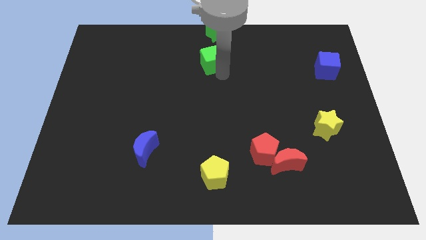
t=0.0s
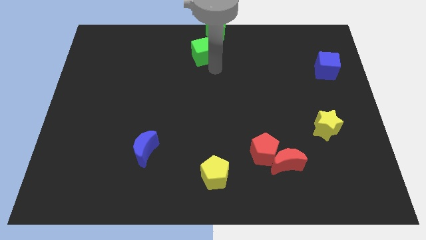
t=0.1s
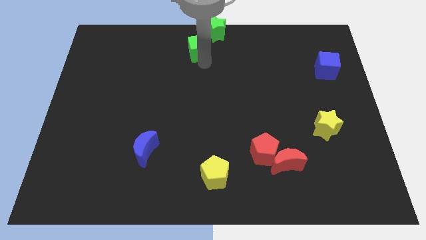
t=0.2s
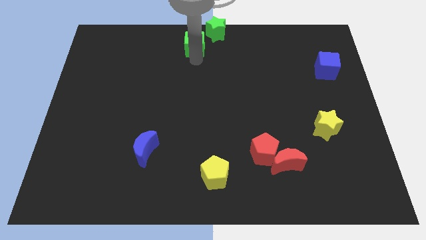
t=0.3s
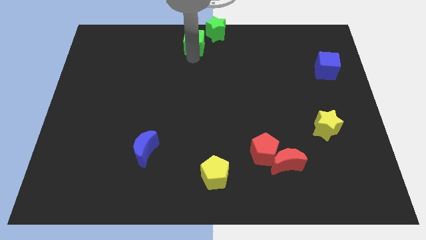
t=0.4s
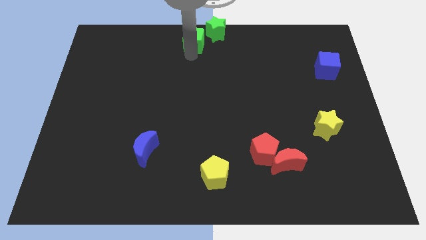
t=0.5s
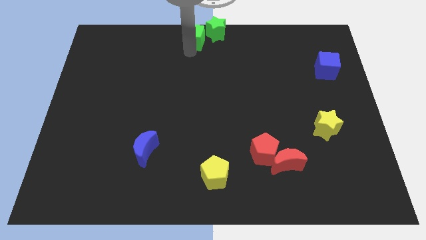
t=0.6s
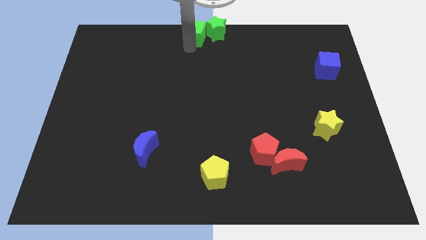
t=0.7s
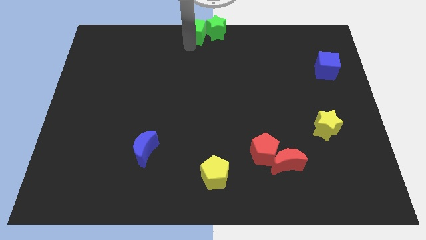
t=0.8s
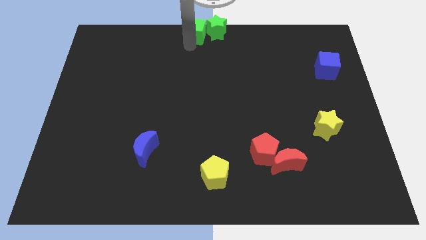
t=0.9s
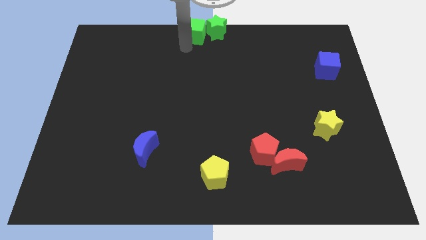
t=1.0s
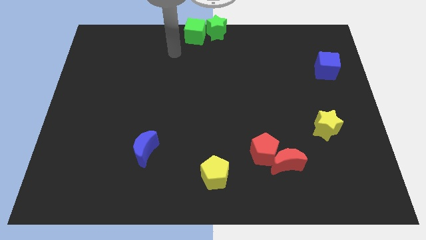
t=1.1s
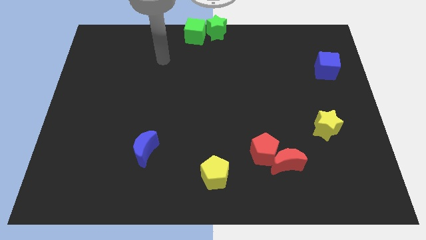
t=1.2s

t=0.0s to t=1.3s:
push the green cube to the left of the green star

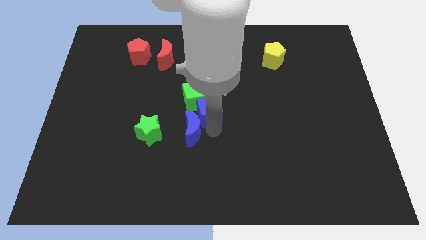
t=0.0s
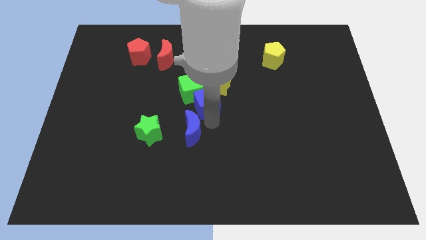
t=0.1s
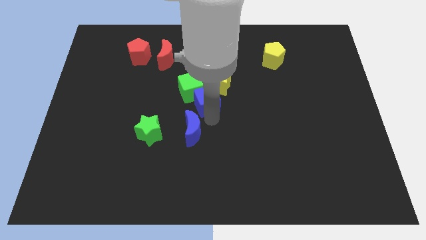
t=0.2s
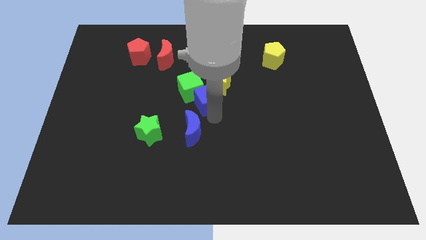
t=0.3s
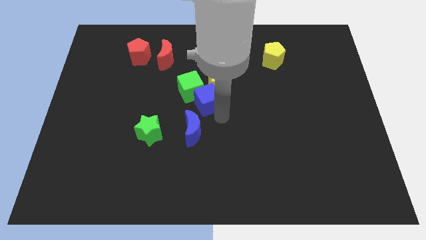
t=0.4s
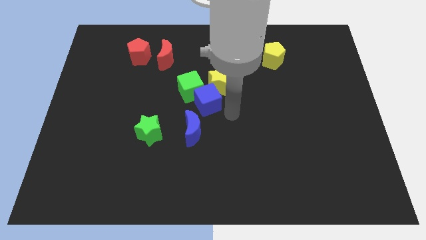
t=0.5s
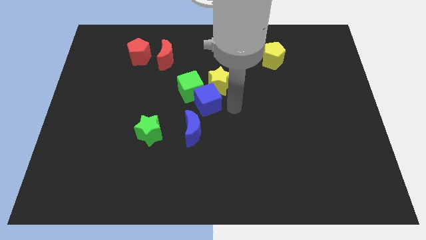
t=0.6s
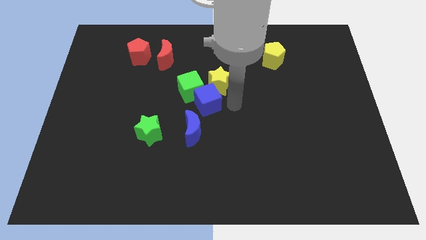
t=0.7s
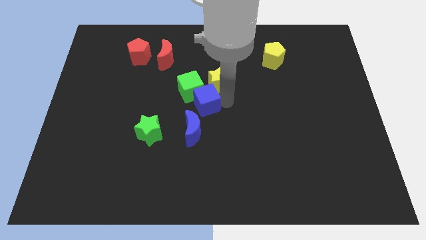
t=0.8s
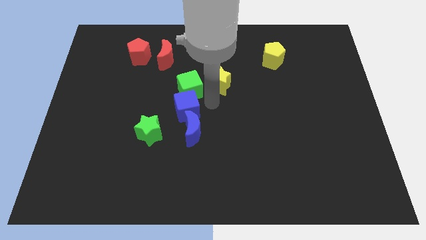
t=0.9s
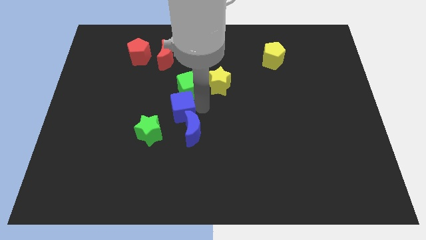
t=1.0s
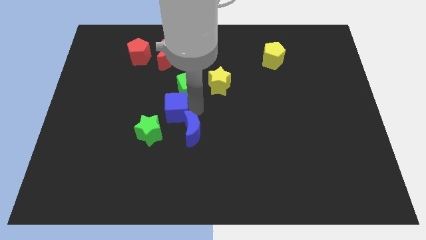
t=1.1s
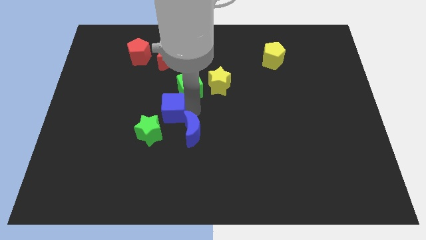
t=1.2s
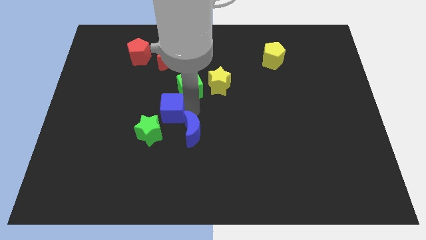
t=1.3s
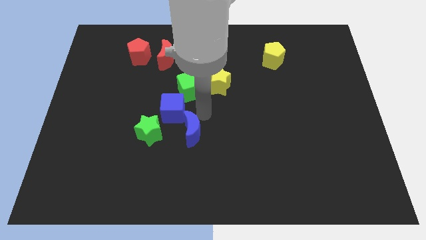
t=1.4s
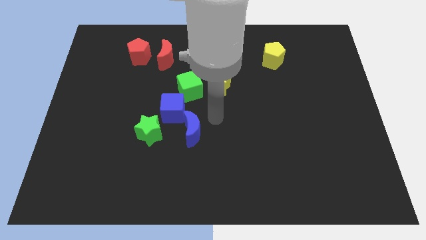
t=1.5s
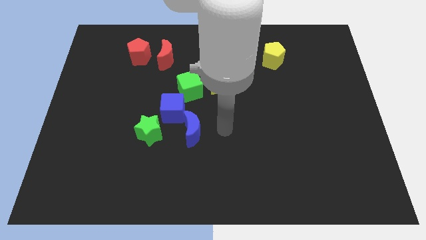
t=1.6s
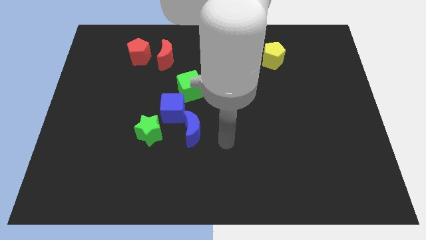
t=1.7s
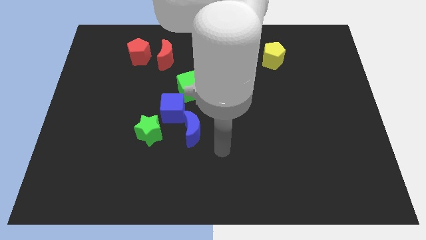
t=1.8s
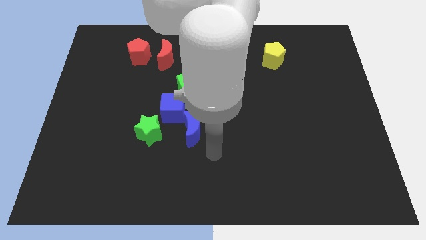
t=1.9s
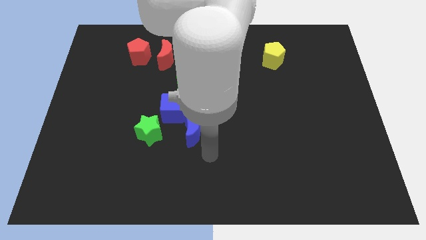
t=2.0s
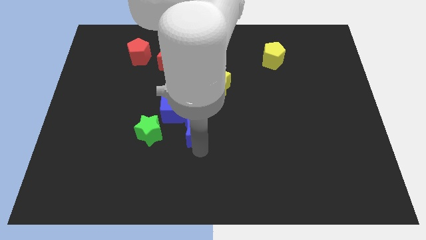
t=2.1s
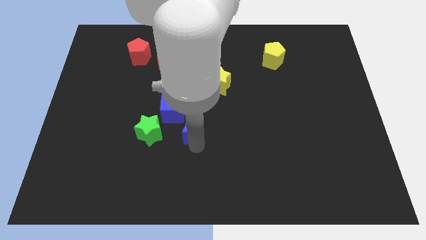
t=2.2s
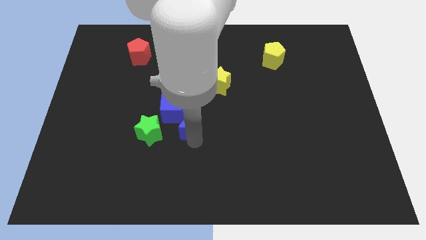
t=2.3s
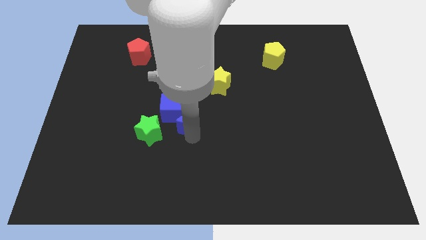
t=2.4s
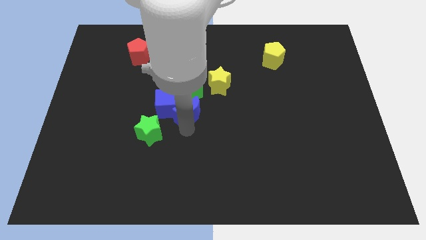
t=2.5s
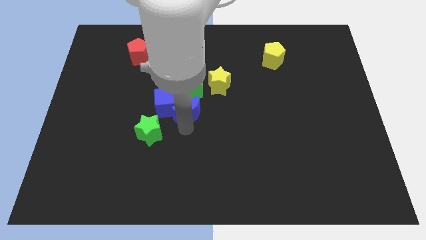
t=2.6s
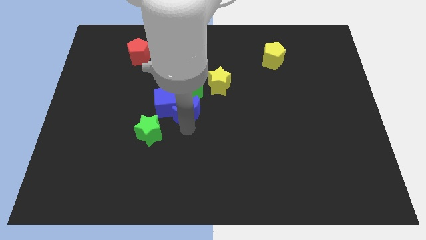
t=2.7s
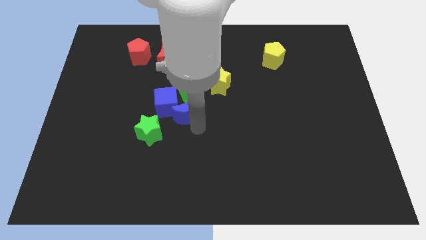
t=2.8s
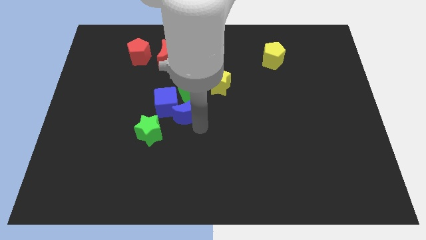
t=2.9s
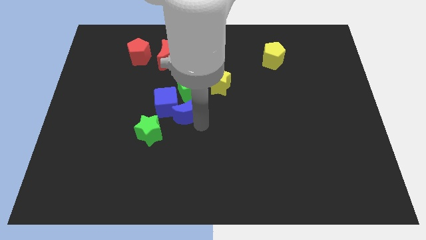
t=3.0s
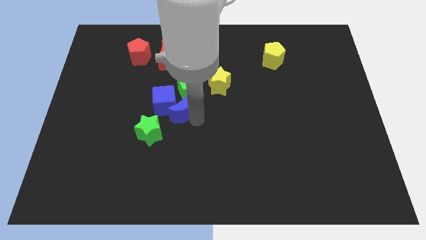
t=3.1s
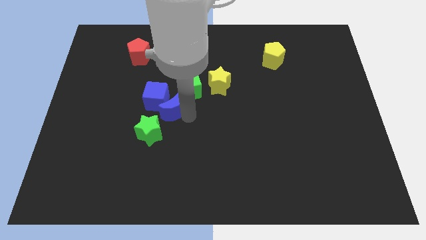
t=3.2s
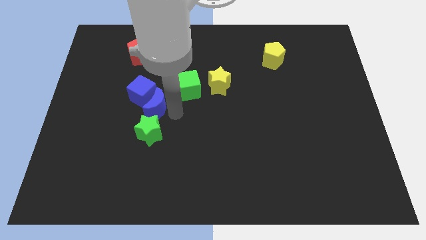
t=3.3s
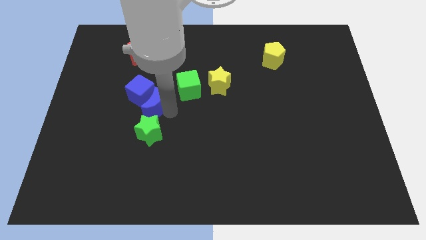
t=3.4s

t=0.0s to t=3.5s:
push the blue blocks to the top of the green star

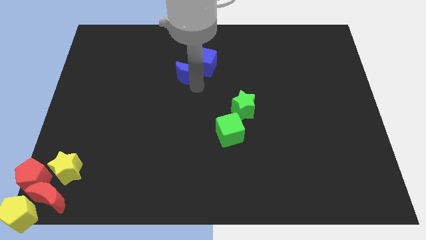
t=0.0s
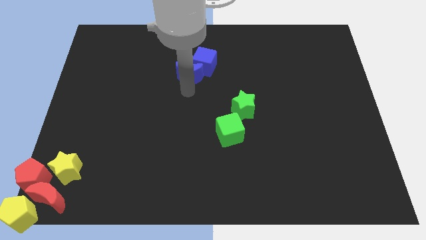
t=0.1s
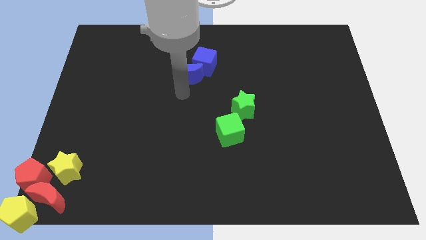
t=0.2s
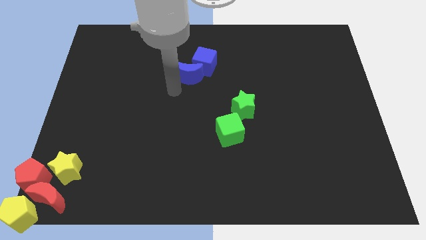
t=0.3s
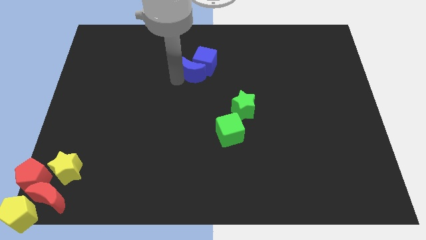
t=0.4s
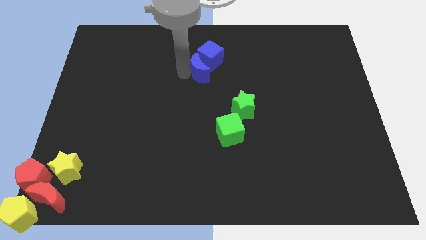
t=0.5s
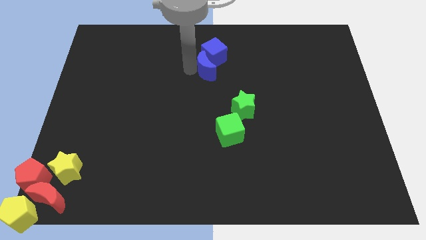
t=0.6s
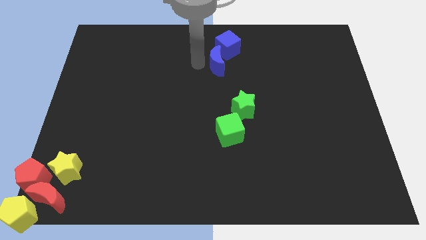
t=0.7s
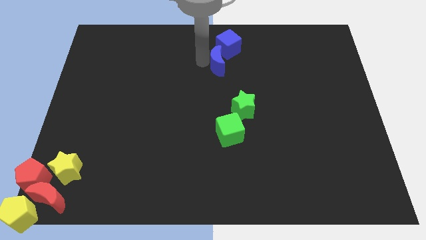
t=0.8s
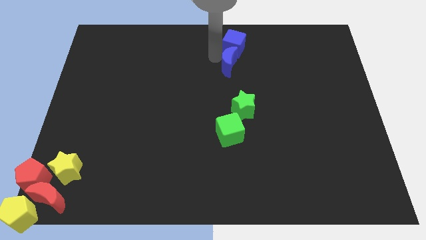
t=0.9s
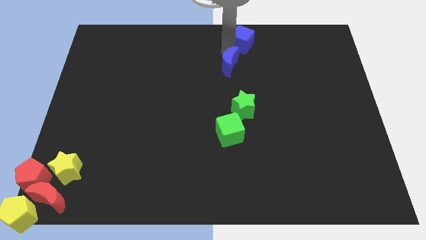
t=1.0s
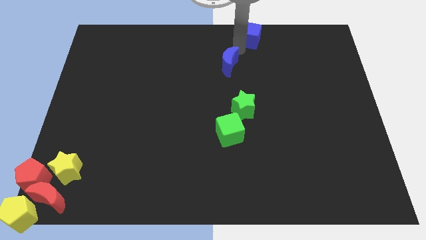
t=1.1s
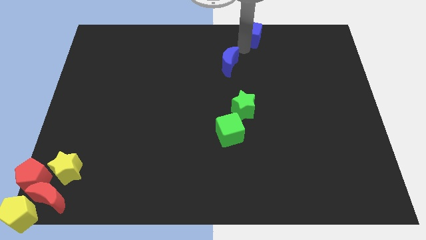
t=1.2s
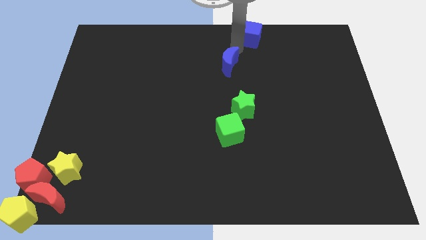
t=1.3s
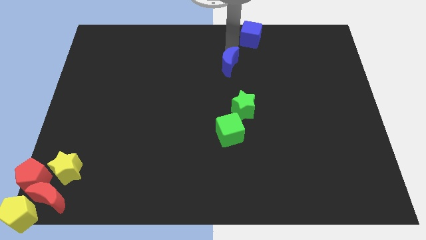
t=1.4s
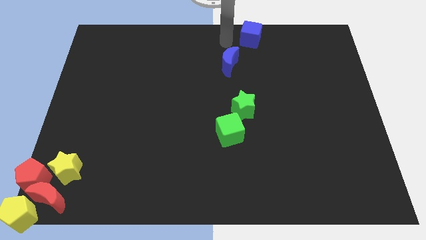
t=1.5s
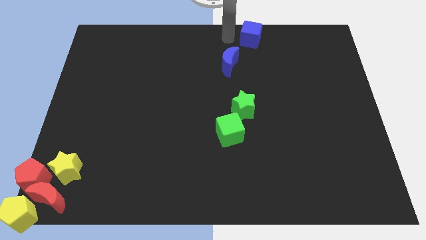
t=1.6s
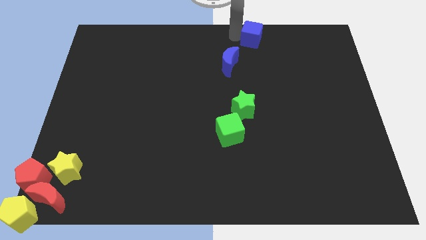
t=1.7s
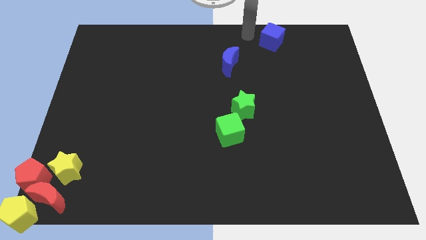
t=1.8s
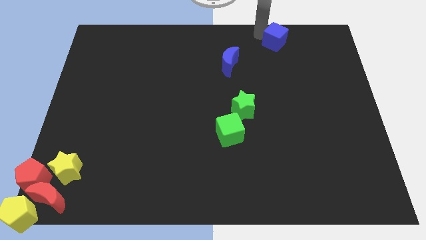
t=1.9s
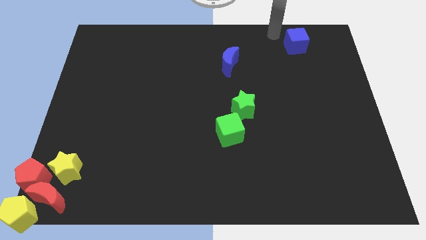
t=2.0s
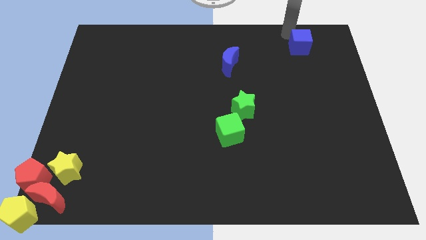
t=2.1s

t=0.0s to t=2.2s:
place the blue moon above the green star

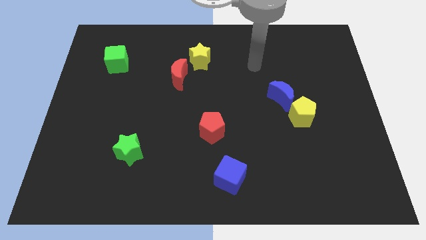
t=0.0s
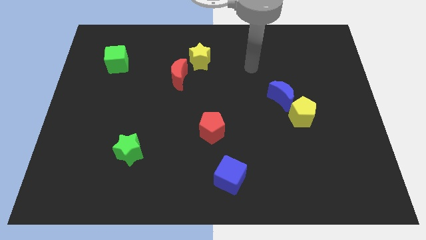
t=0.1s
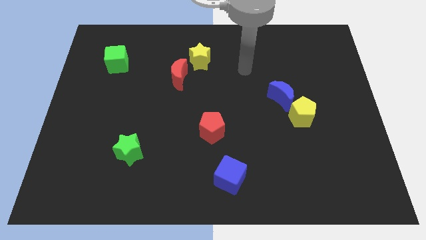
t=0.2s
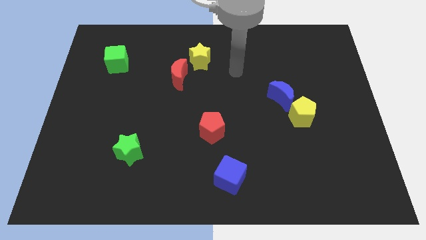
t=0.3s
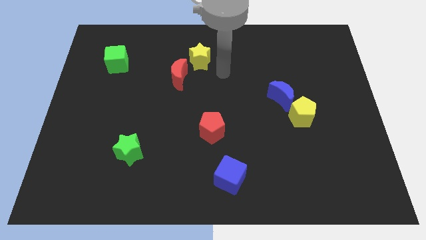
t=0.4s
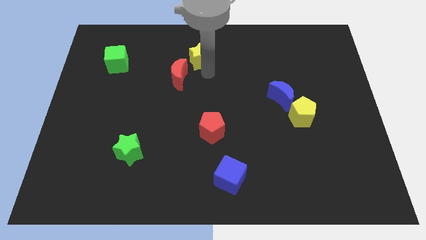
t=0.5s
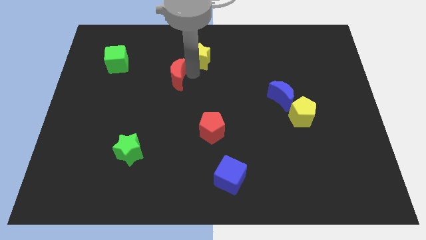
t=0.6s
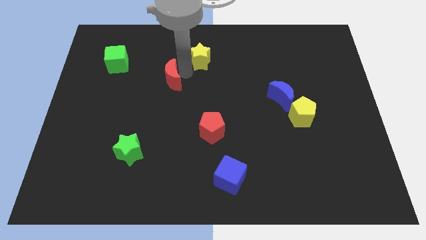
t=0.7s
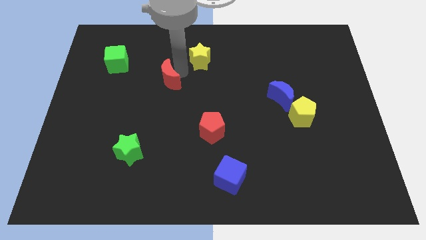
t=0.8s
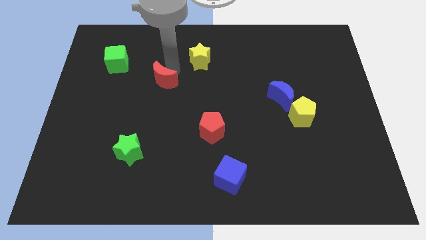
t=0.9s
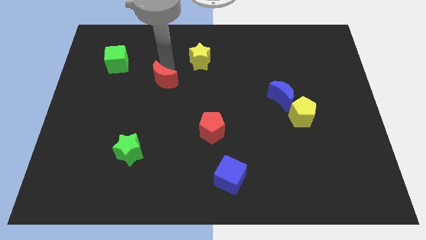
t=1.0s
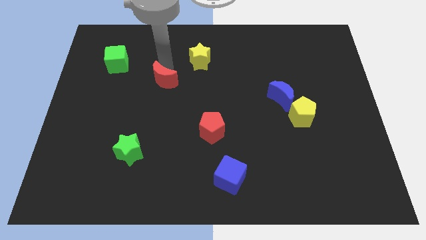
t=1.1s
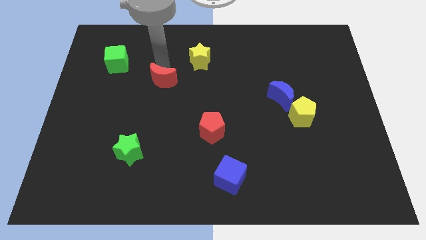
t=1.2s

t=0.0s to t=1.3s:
move red moon away from yellow star

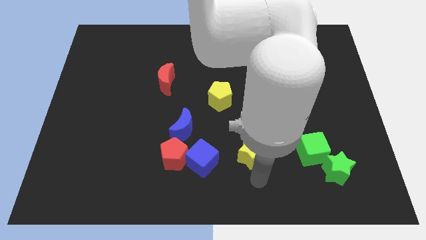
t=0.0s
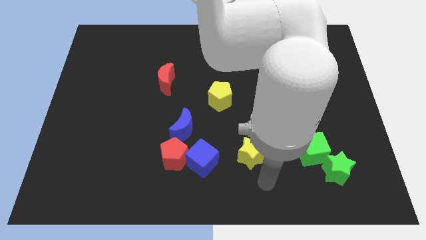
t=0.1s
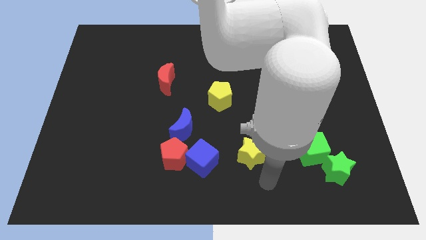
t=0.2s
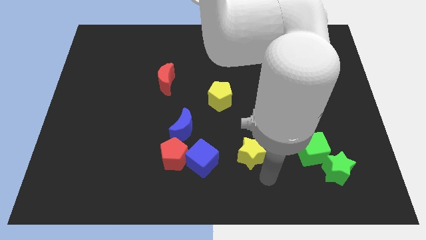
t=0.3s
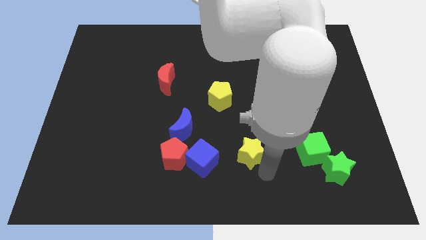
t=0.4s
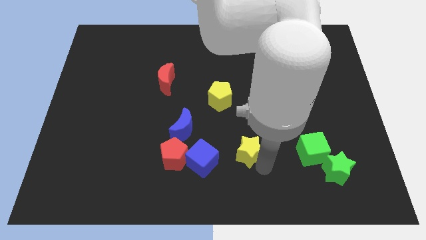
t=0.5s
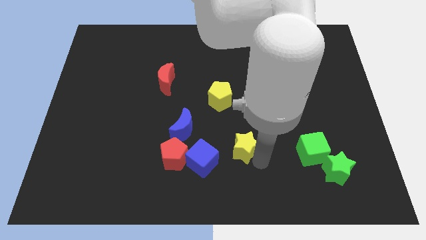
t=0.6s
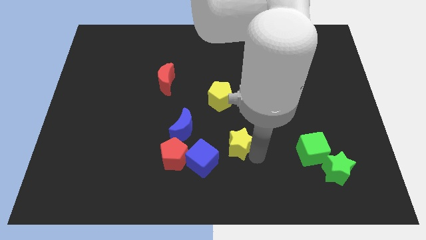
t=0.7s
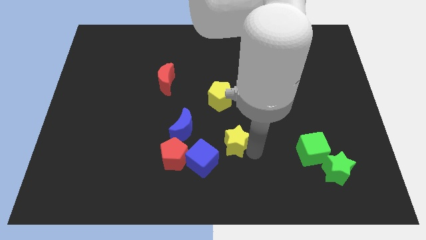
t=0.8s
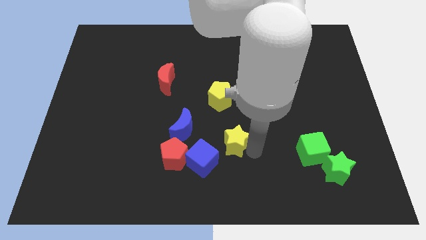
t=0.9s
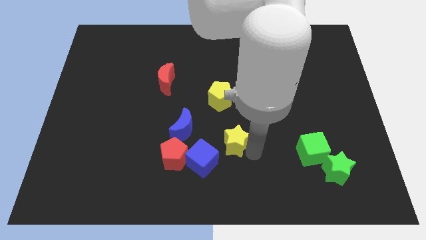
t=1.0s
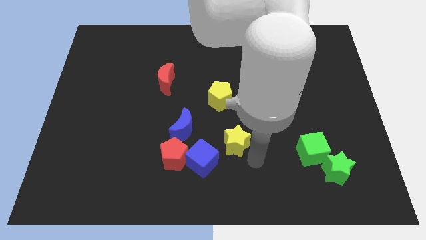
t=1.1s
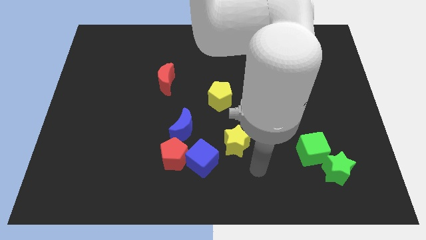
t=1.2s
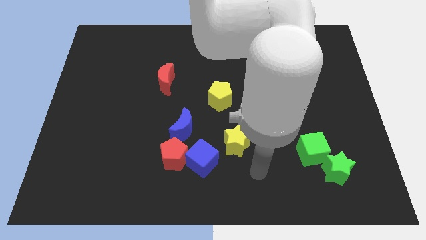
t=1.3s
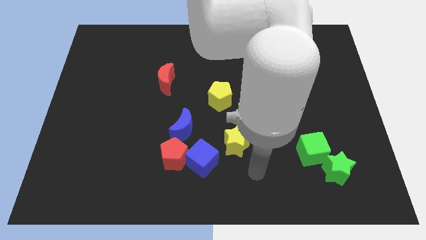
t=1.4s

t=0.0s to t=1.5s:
move the yellow star to the top right of the blue cube
